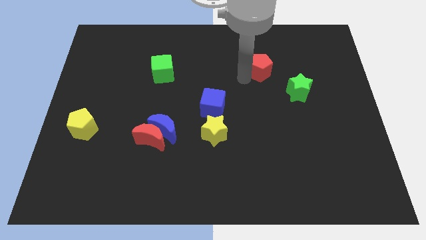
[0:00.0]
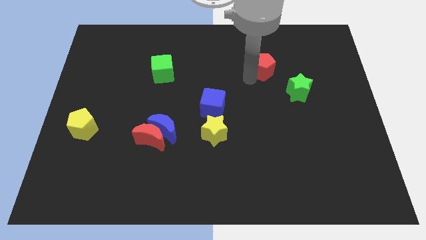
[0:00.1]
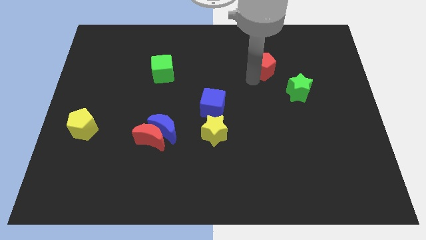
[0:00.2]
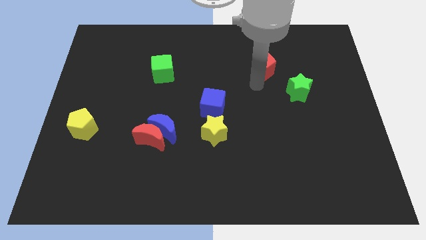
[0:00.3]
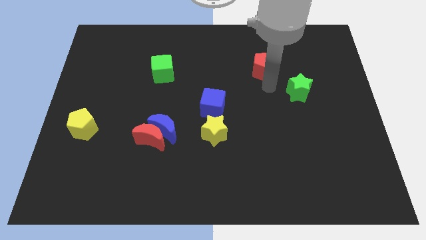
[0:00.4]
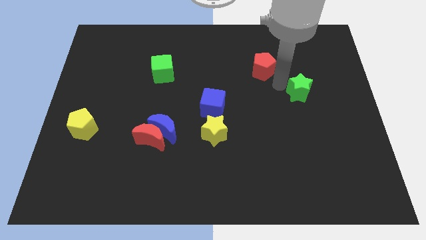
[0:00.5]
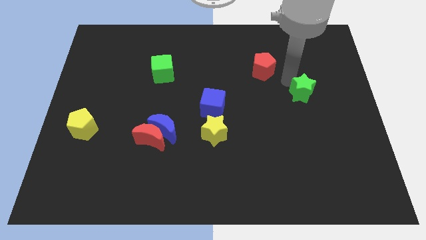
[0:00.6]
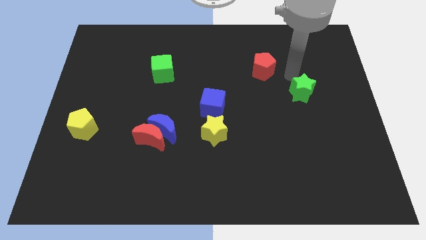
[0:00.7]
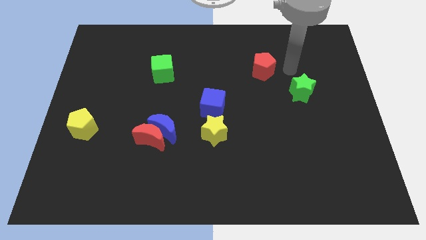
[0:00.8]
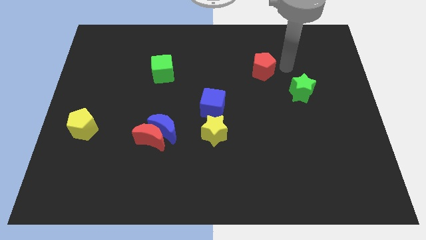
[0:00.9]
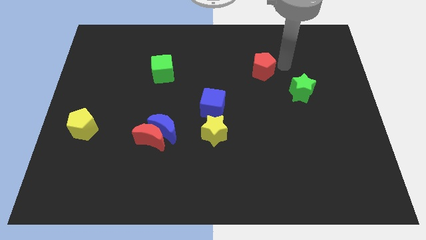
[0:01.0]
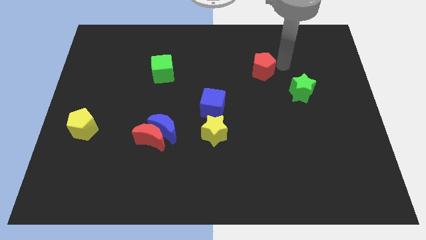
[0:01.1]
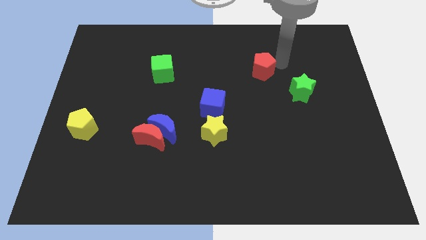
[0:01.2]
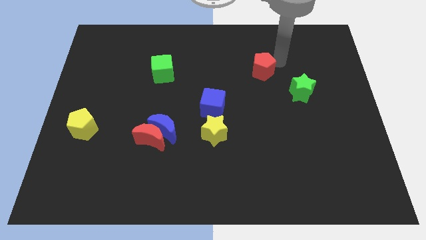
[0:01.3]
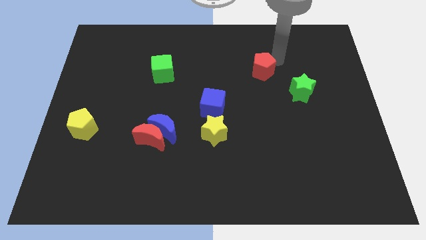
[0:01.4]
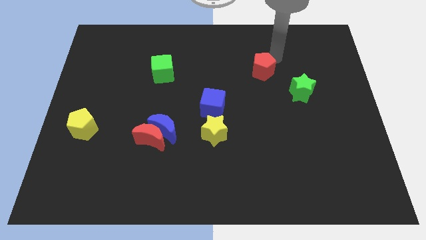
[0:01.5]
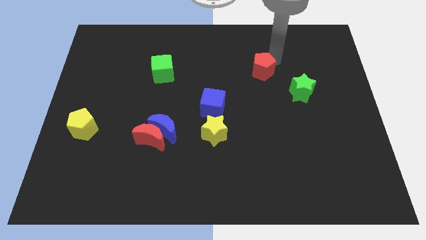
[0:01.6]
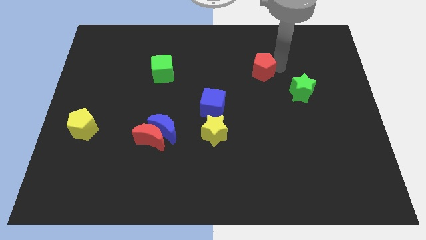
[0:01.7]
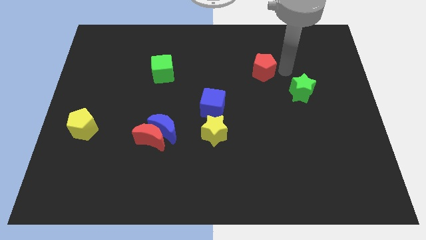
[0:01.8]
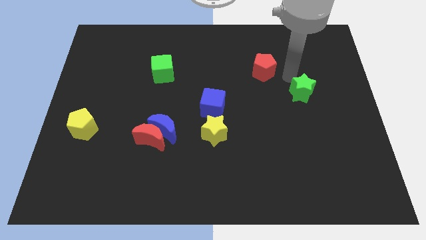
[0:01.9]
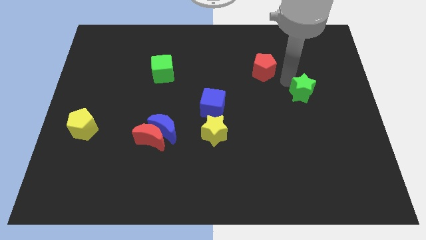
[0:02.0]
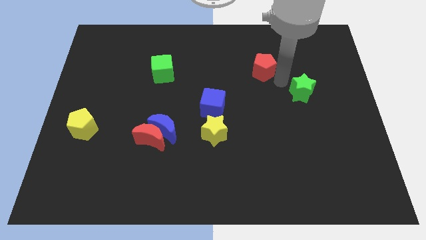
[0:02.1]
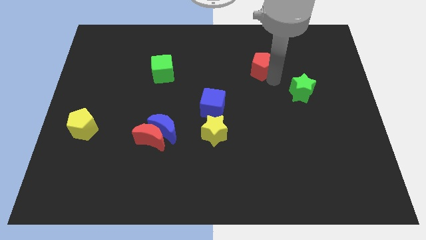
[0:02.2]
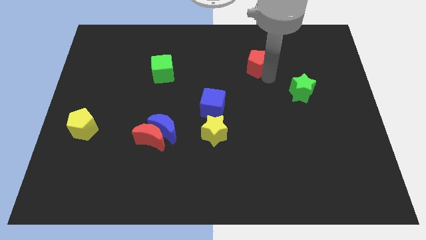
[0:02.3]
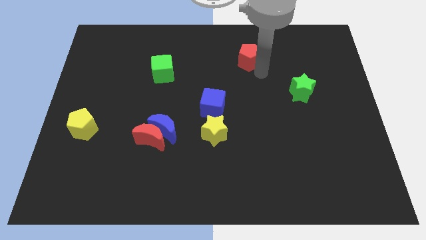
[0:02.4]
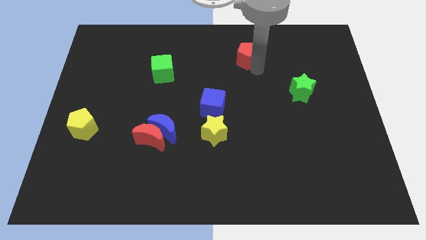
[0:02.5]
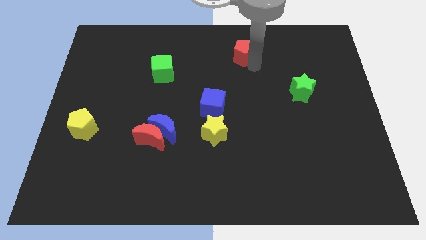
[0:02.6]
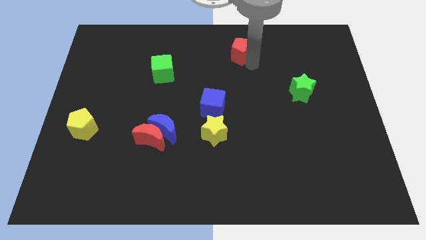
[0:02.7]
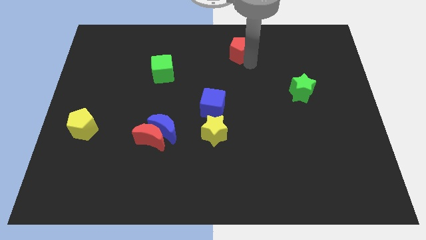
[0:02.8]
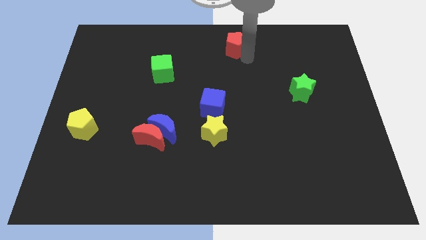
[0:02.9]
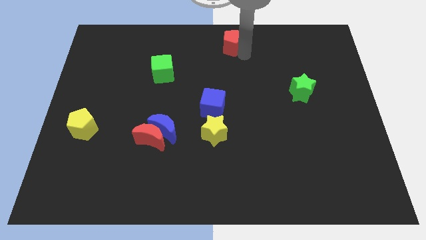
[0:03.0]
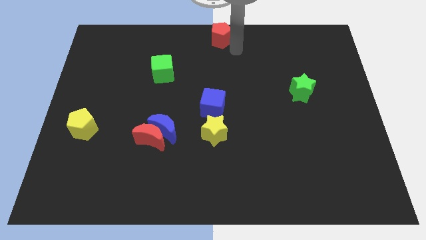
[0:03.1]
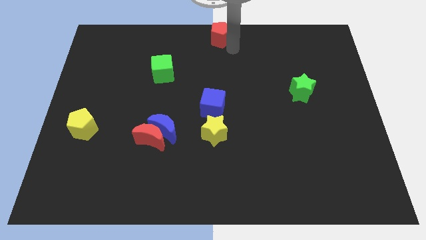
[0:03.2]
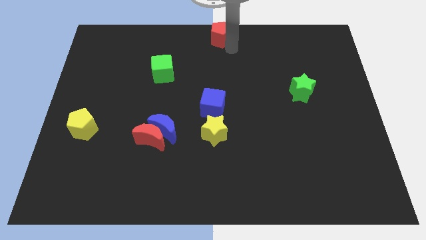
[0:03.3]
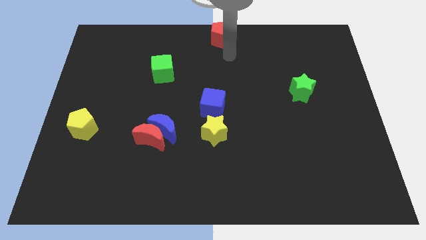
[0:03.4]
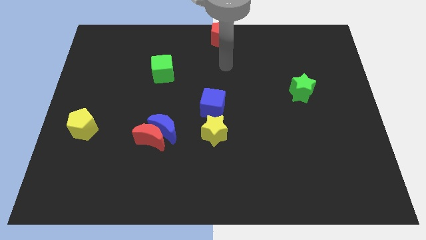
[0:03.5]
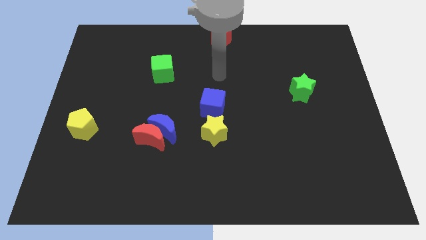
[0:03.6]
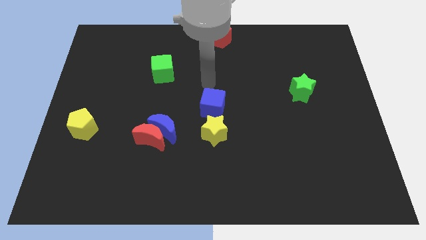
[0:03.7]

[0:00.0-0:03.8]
place the red pentagon at the top center of the board

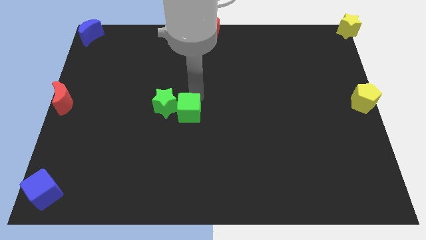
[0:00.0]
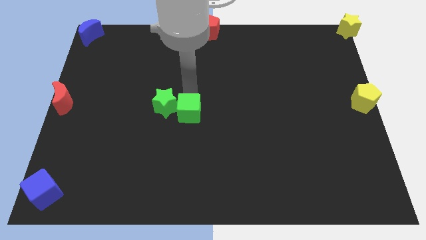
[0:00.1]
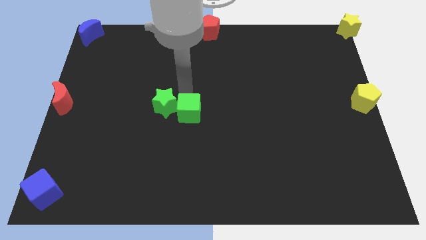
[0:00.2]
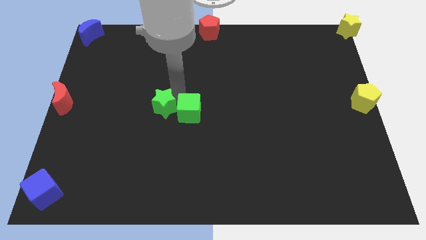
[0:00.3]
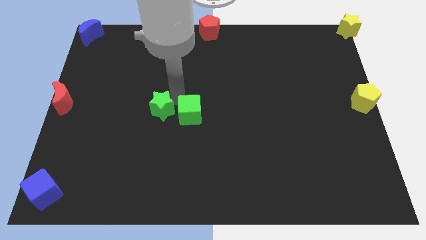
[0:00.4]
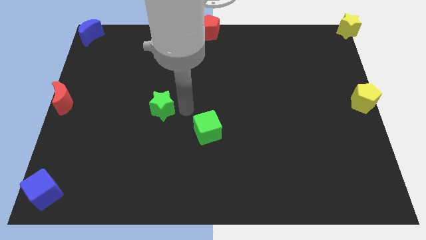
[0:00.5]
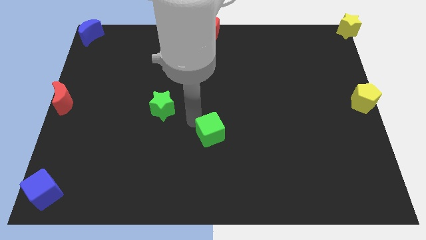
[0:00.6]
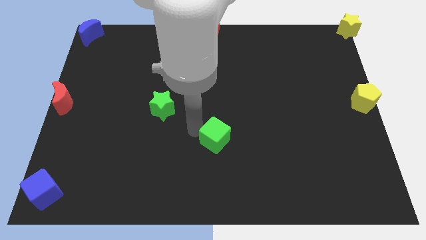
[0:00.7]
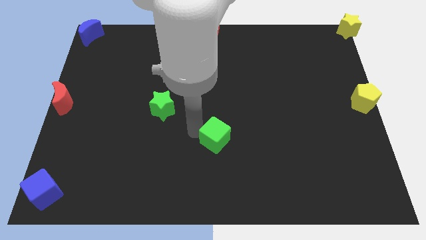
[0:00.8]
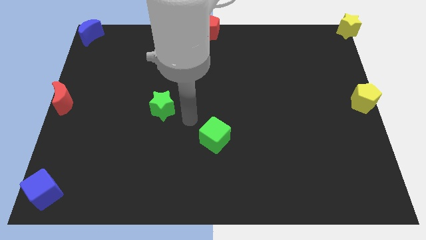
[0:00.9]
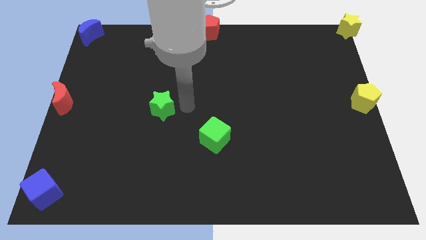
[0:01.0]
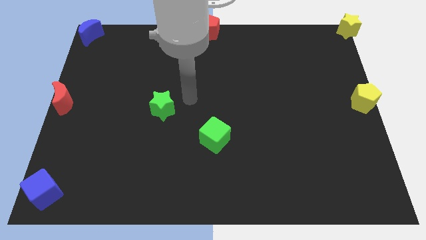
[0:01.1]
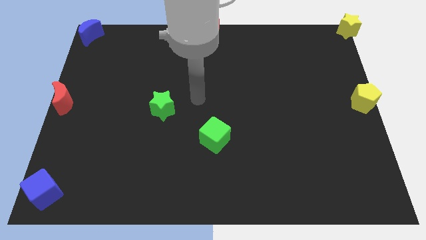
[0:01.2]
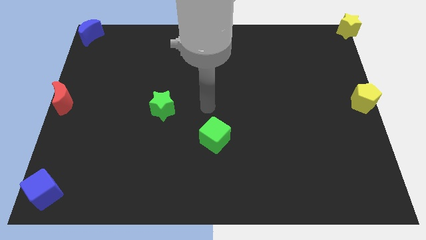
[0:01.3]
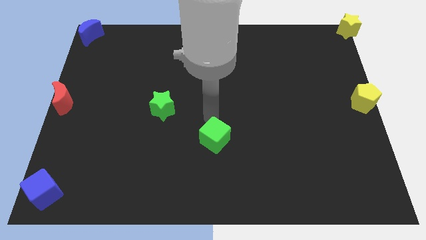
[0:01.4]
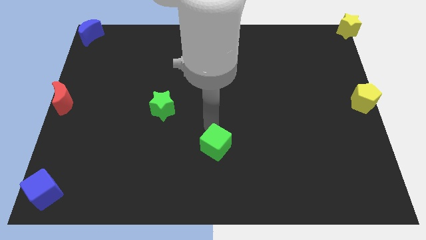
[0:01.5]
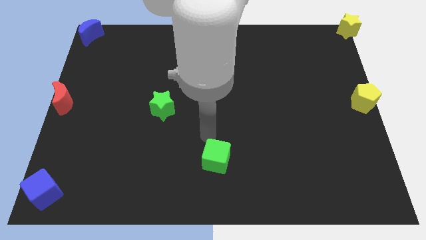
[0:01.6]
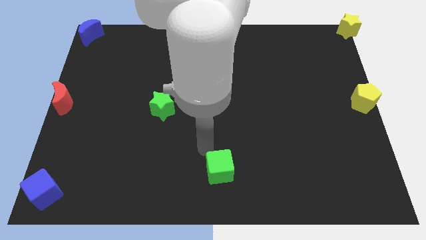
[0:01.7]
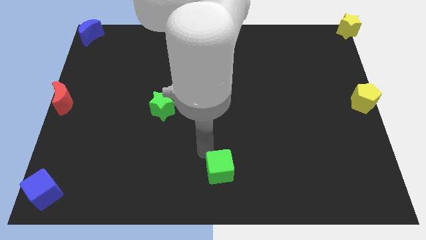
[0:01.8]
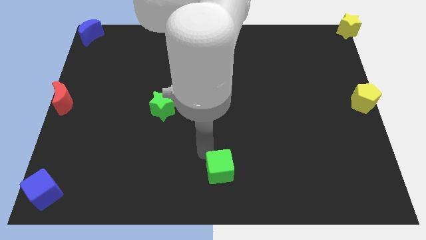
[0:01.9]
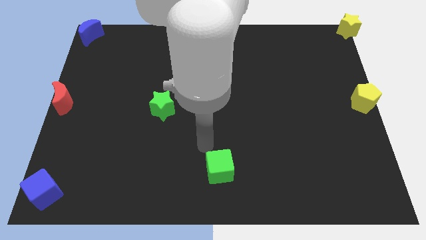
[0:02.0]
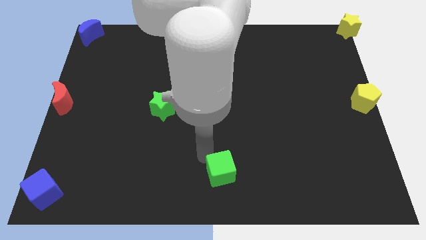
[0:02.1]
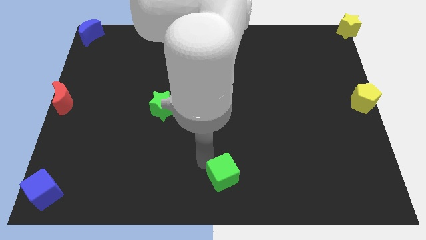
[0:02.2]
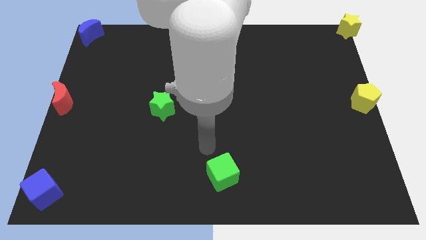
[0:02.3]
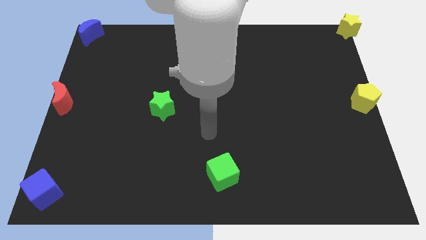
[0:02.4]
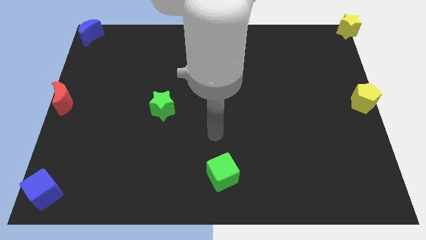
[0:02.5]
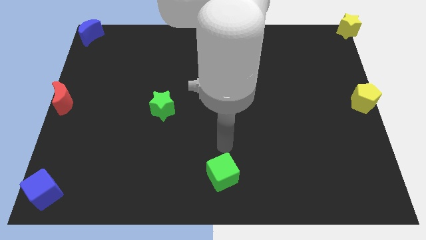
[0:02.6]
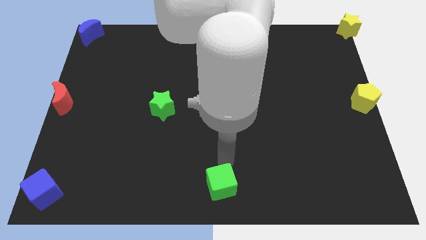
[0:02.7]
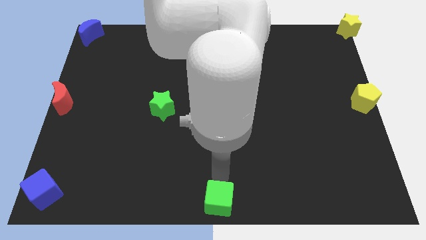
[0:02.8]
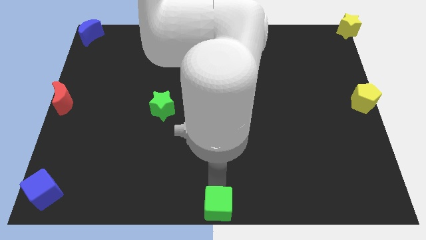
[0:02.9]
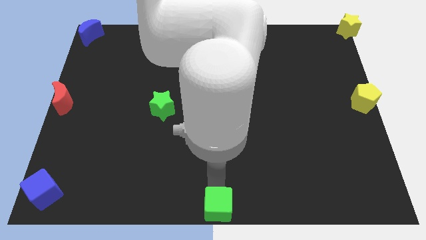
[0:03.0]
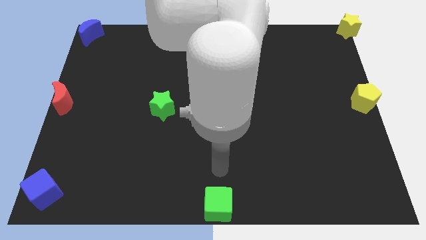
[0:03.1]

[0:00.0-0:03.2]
push the green cube towards the bottom center of the board

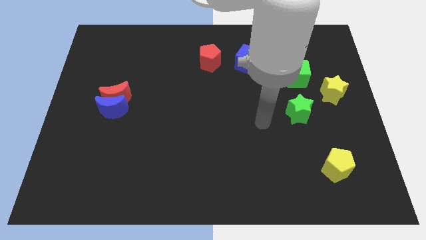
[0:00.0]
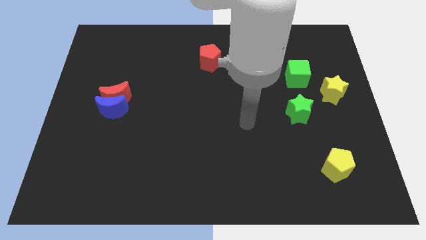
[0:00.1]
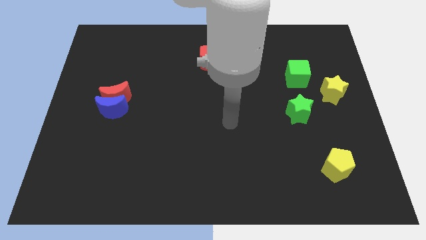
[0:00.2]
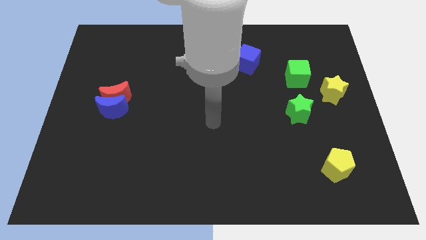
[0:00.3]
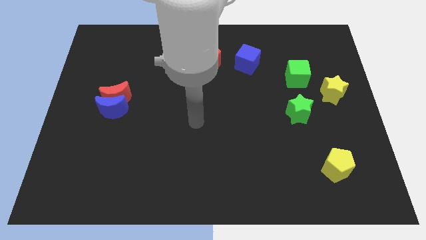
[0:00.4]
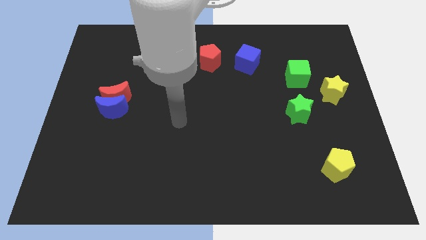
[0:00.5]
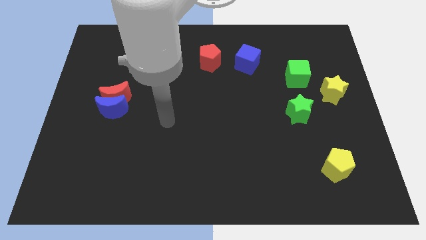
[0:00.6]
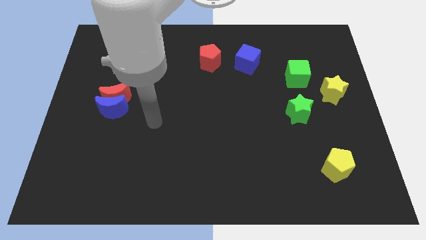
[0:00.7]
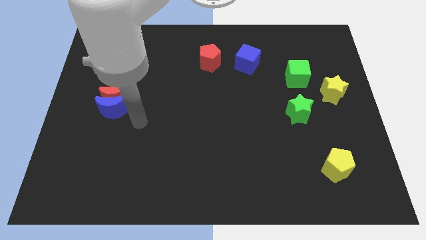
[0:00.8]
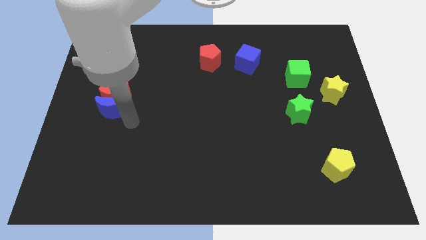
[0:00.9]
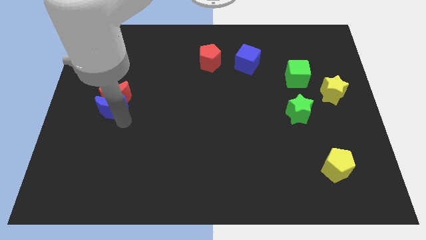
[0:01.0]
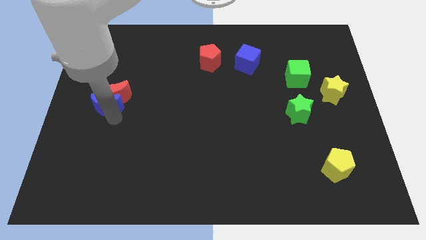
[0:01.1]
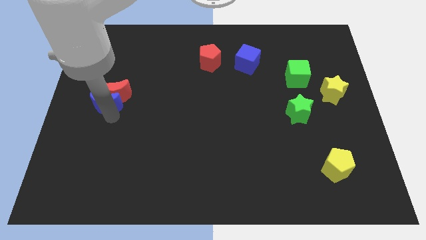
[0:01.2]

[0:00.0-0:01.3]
touch the bottom of blue moon

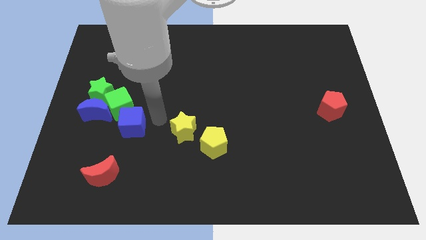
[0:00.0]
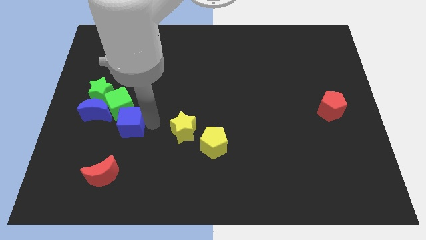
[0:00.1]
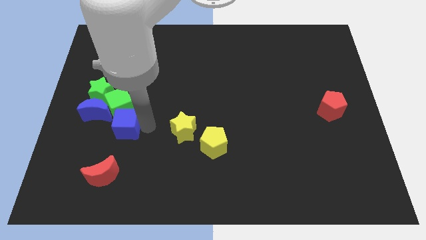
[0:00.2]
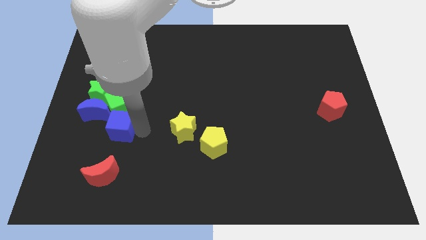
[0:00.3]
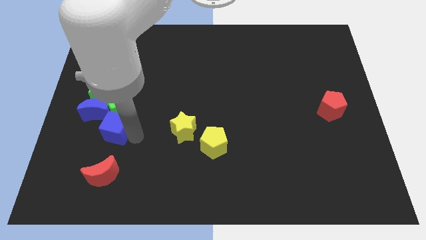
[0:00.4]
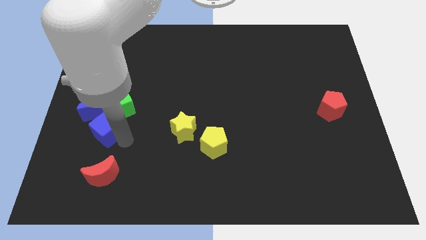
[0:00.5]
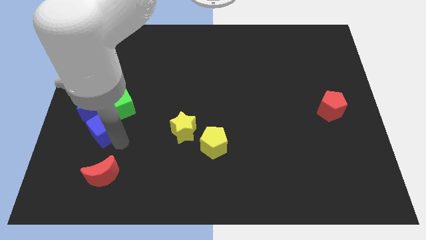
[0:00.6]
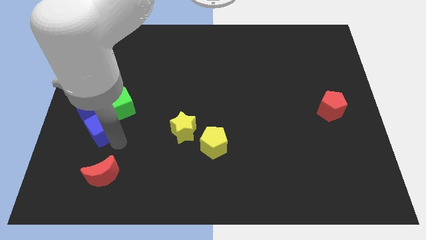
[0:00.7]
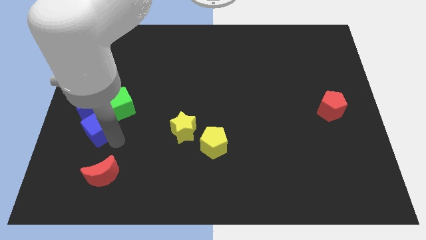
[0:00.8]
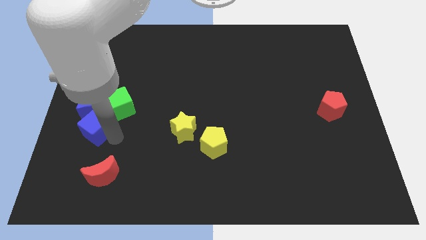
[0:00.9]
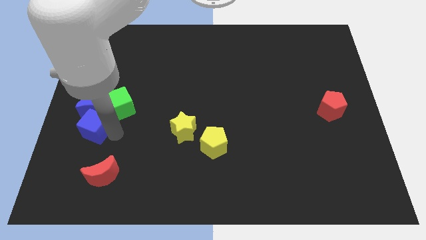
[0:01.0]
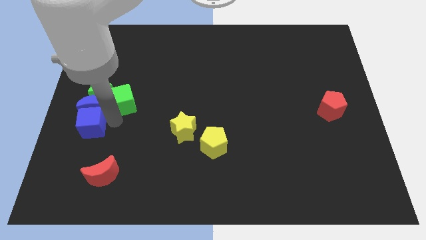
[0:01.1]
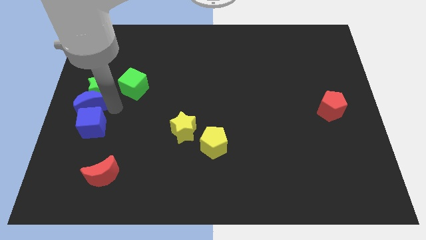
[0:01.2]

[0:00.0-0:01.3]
place blue cube into the blue crescent
